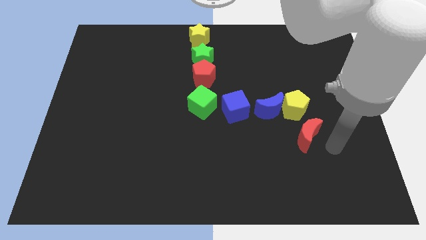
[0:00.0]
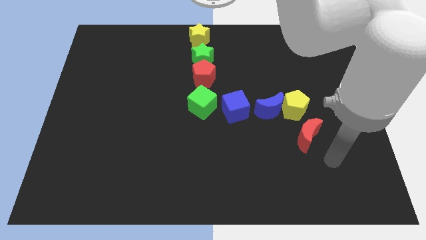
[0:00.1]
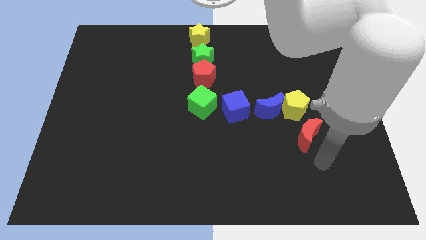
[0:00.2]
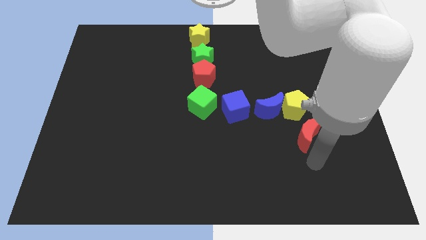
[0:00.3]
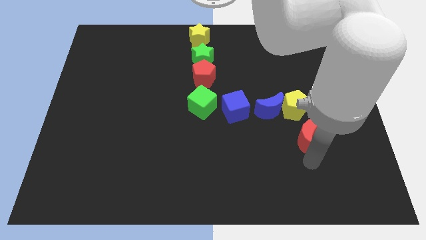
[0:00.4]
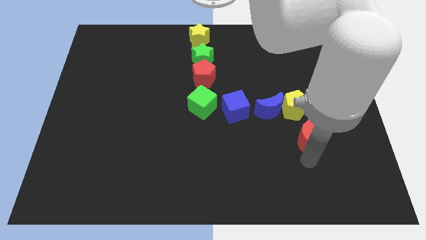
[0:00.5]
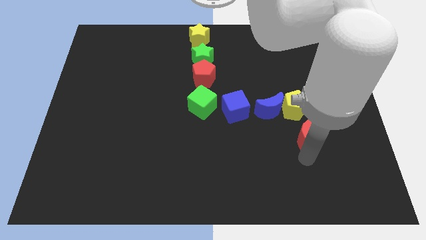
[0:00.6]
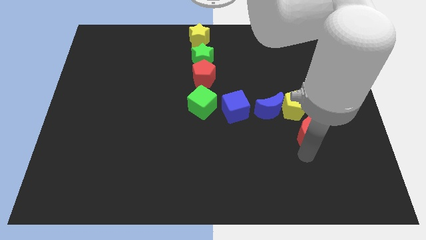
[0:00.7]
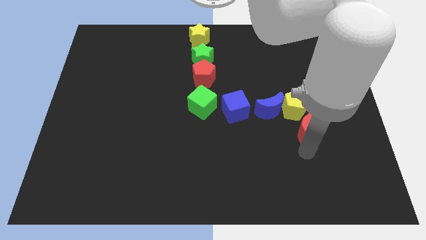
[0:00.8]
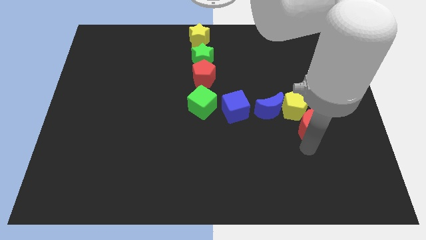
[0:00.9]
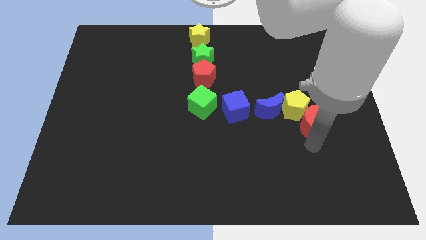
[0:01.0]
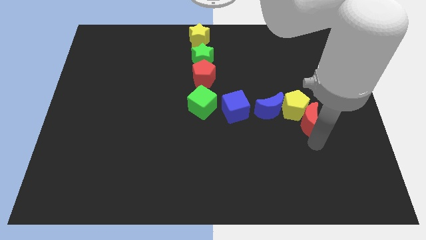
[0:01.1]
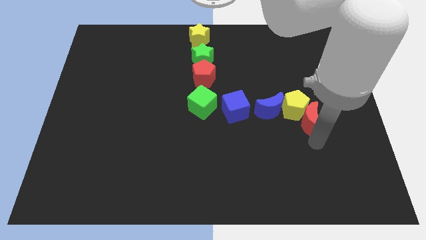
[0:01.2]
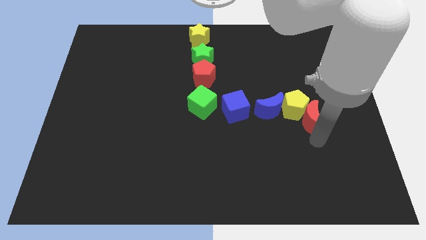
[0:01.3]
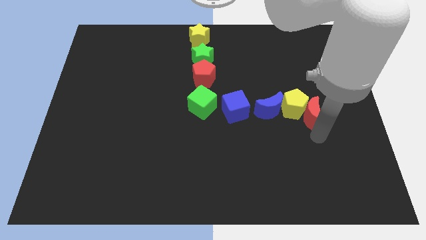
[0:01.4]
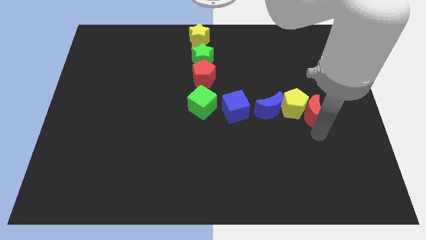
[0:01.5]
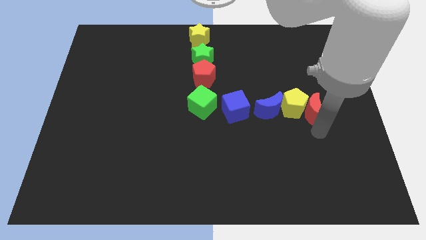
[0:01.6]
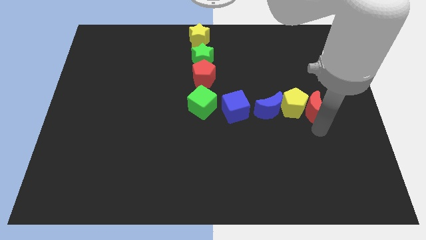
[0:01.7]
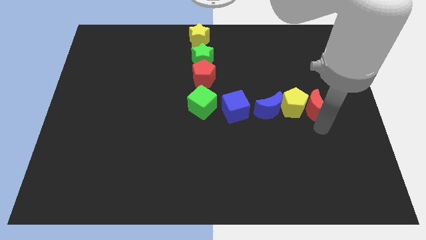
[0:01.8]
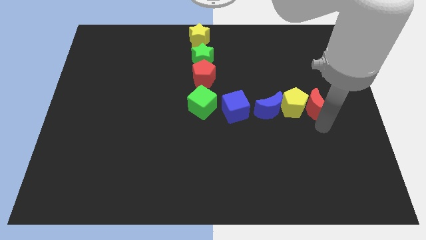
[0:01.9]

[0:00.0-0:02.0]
move the red crescent to the right side of yellow pentagon to form a line

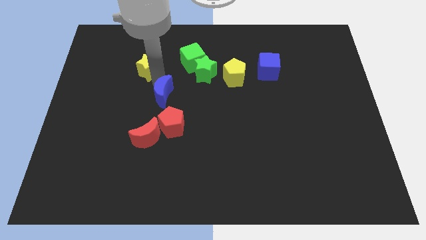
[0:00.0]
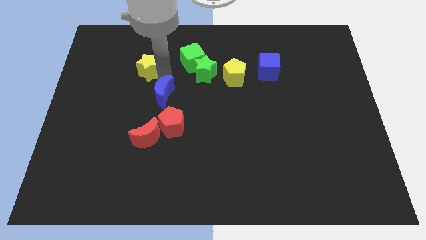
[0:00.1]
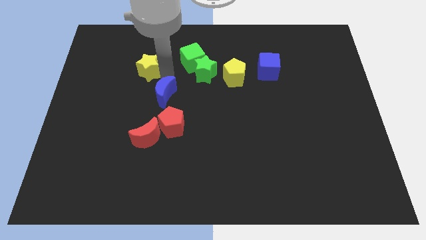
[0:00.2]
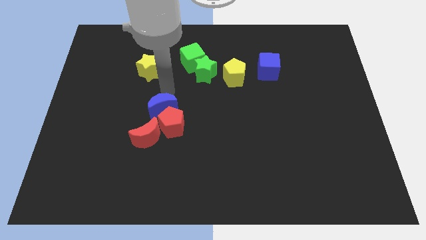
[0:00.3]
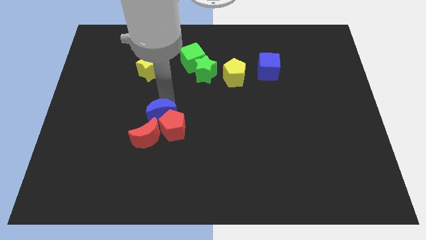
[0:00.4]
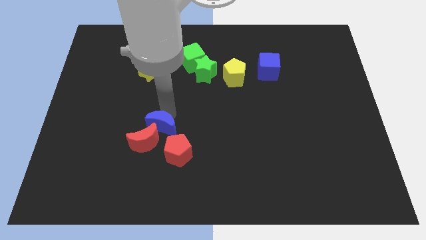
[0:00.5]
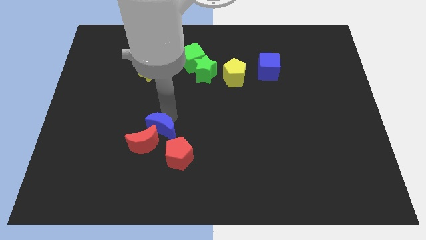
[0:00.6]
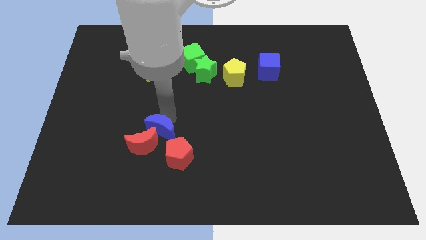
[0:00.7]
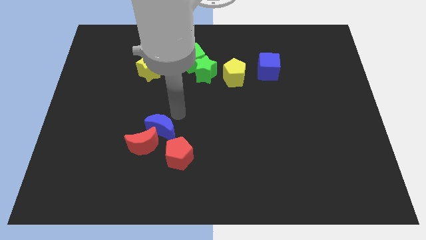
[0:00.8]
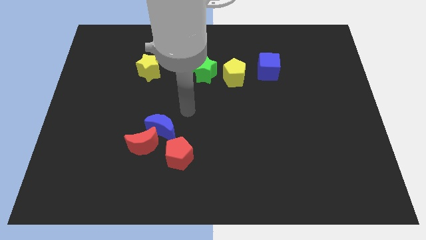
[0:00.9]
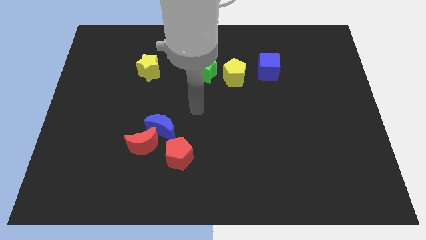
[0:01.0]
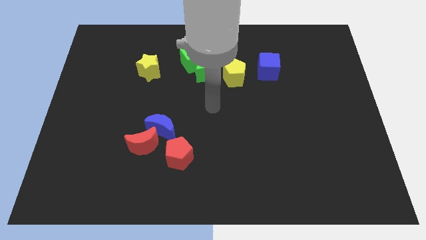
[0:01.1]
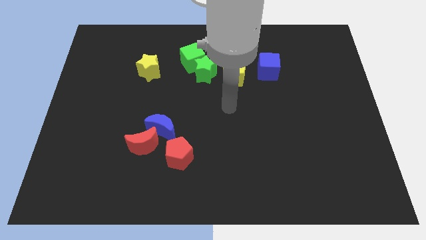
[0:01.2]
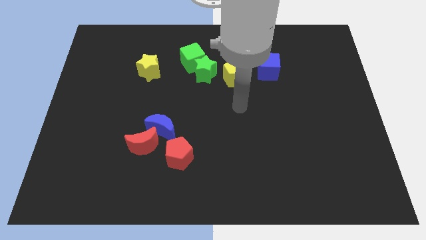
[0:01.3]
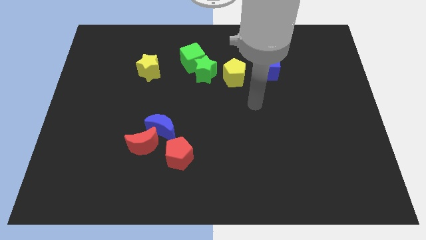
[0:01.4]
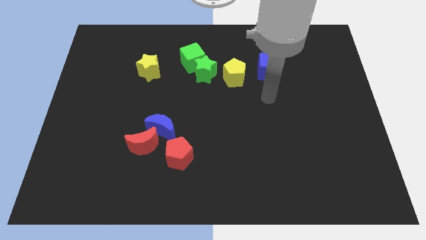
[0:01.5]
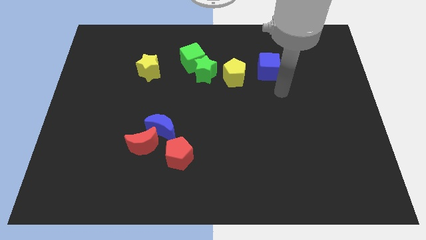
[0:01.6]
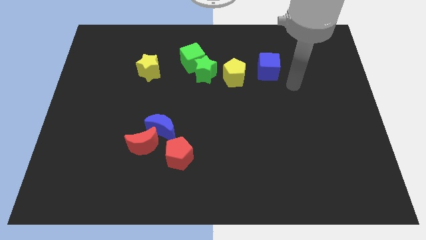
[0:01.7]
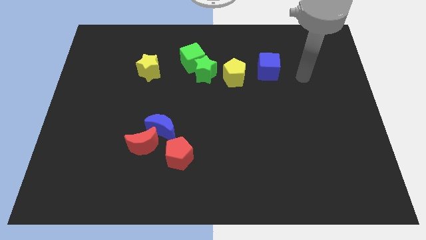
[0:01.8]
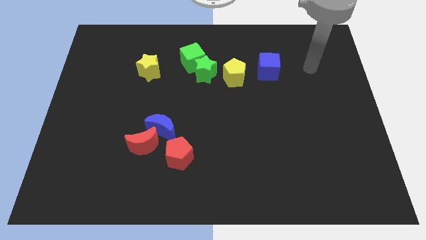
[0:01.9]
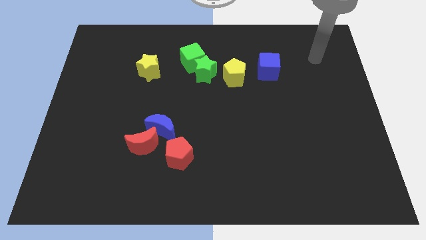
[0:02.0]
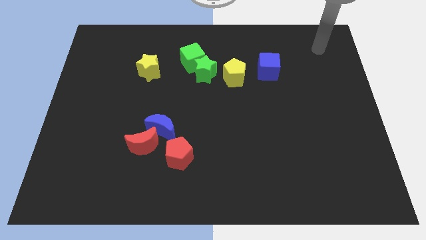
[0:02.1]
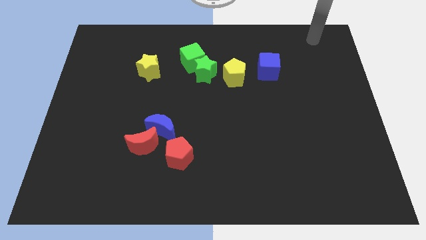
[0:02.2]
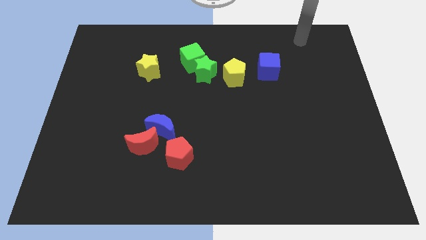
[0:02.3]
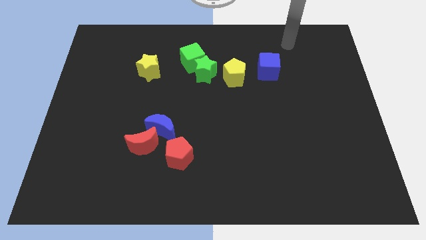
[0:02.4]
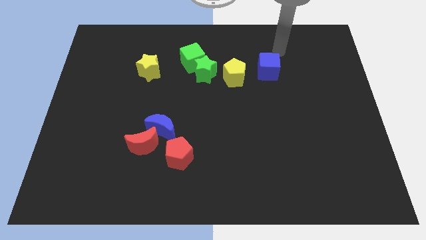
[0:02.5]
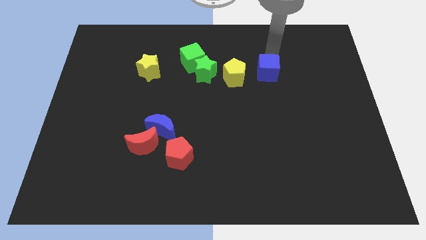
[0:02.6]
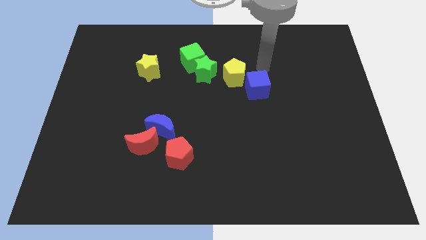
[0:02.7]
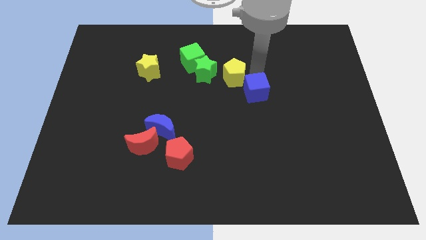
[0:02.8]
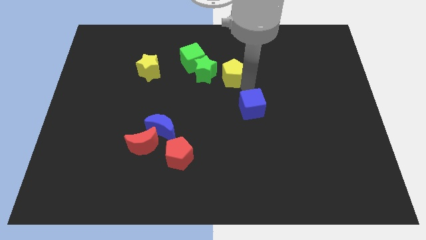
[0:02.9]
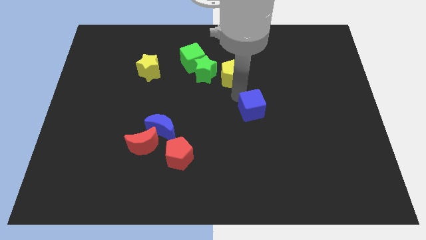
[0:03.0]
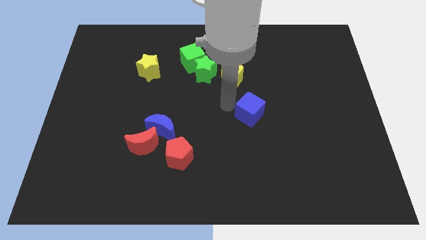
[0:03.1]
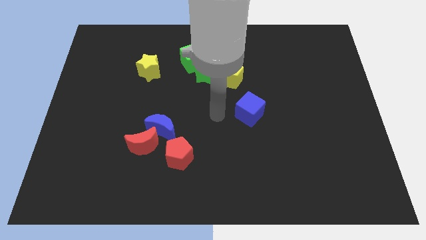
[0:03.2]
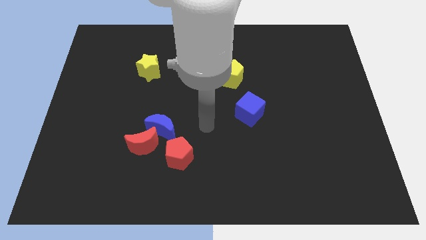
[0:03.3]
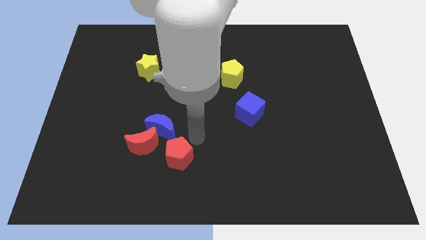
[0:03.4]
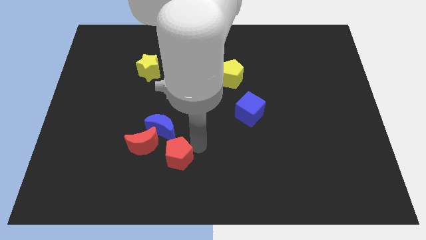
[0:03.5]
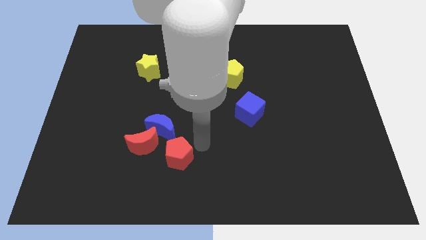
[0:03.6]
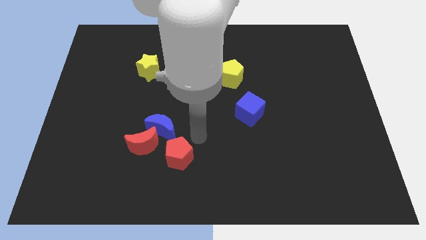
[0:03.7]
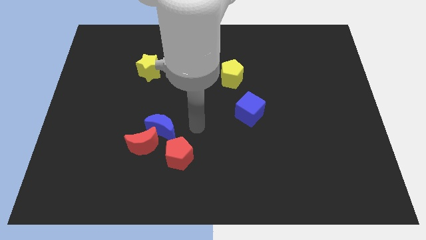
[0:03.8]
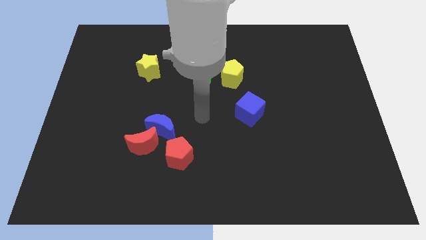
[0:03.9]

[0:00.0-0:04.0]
place the blue moon red crescentred pentagon and cube towards bottom

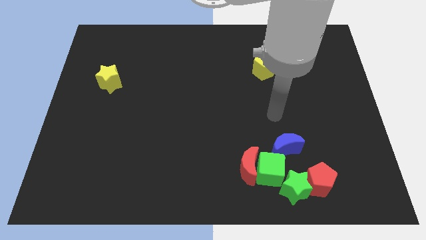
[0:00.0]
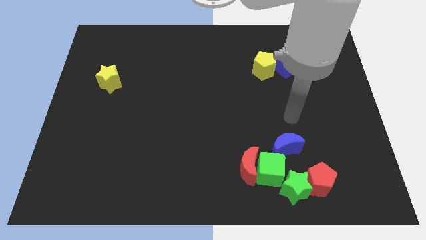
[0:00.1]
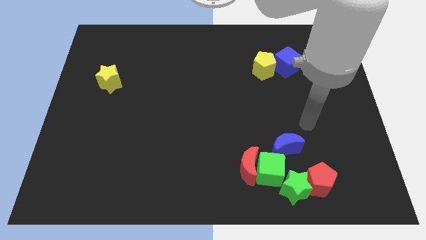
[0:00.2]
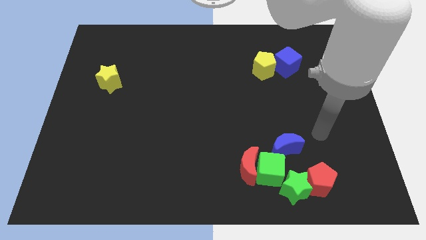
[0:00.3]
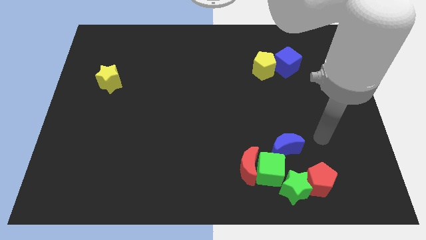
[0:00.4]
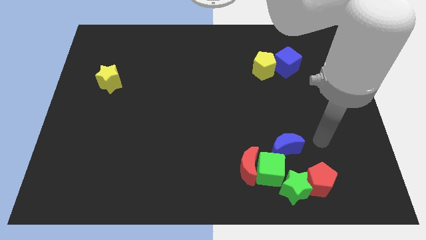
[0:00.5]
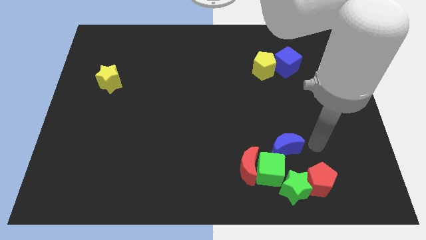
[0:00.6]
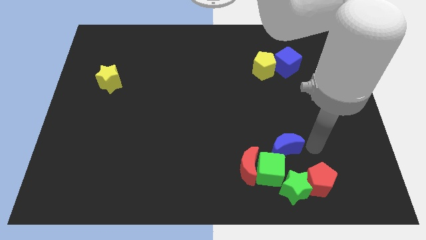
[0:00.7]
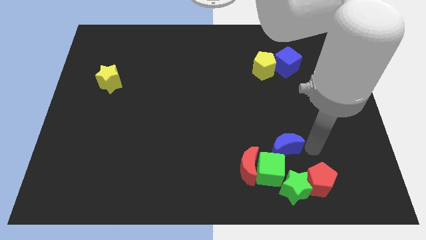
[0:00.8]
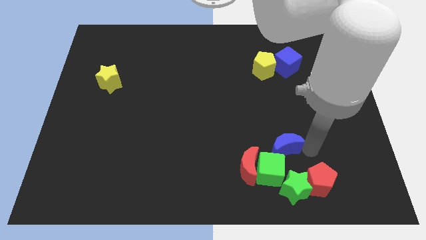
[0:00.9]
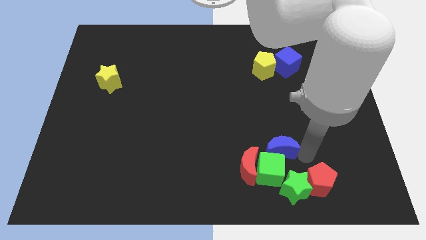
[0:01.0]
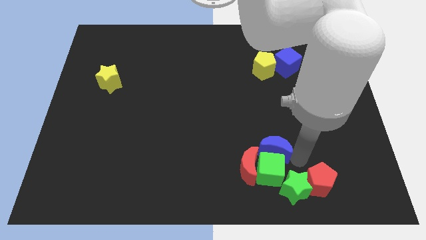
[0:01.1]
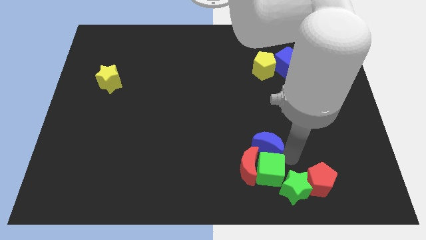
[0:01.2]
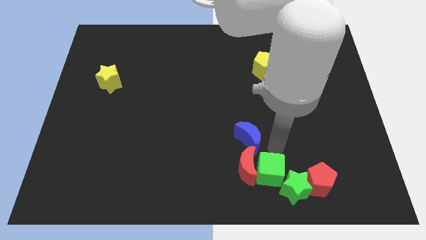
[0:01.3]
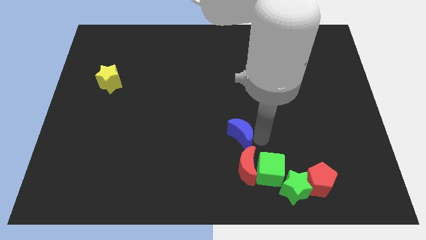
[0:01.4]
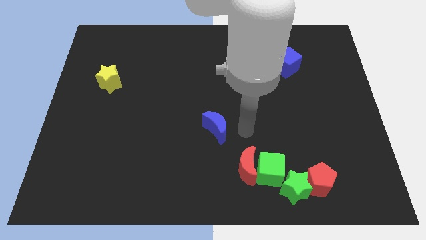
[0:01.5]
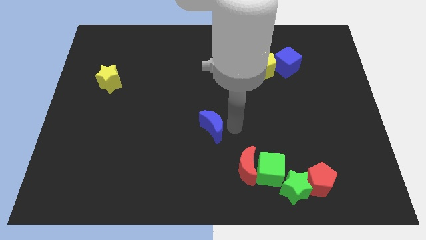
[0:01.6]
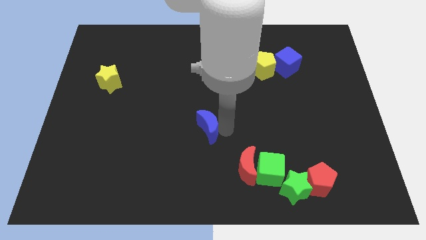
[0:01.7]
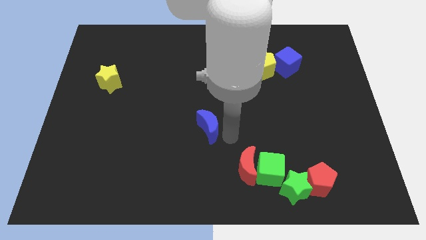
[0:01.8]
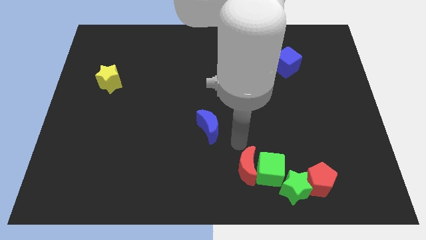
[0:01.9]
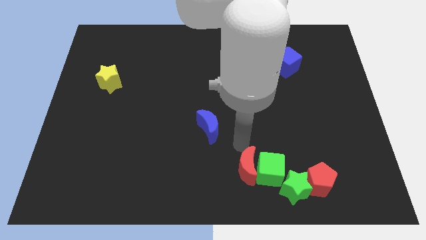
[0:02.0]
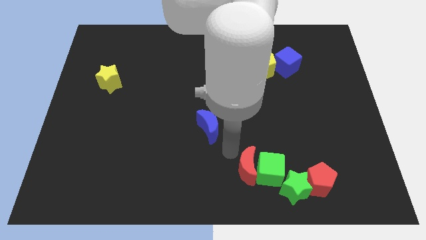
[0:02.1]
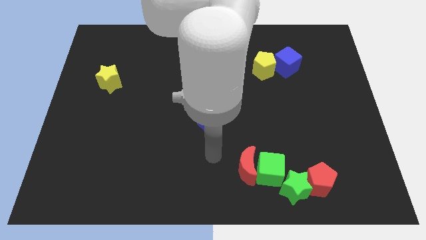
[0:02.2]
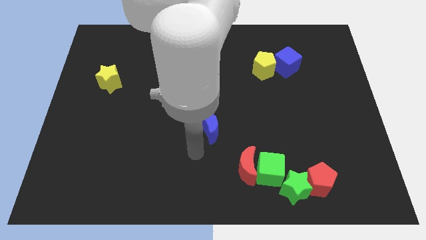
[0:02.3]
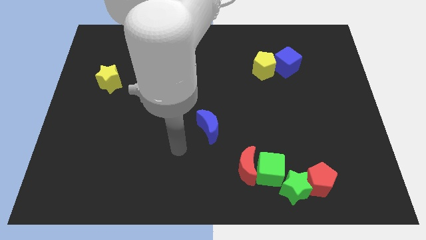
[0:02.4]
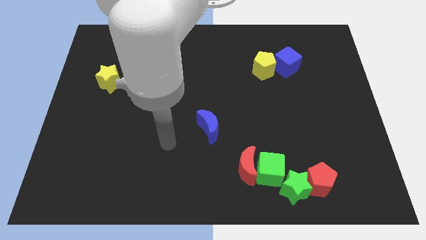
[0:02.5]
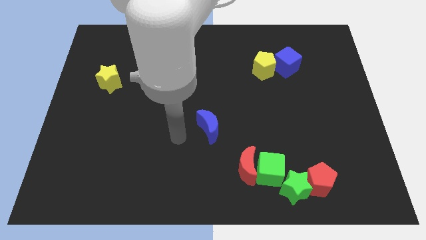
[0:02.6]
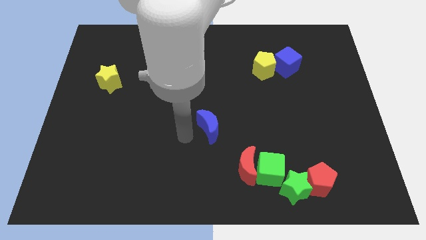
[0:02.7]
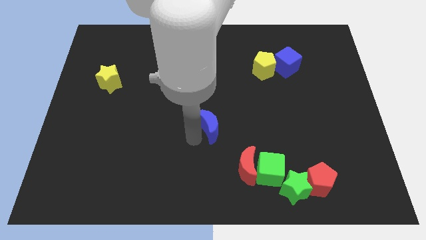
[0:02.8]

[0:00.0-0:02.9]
move the blue moon to the center of the board

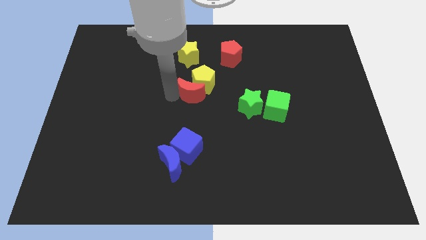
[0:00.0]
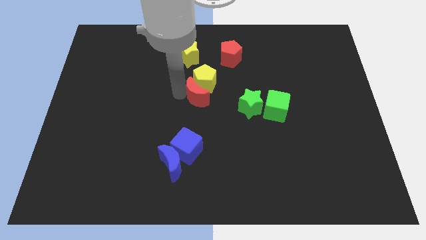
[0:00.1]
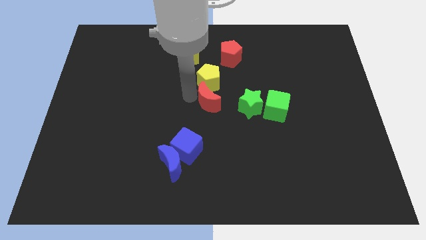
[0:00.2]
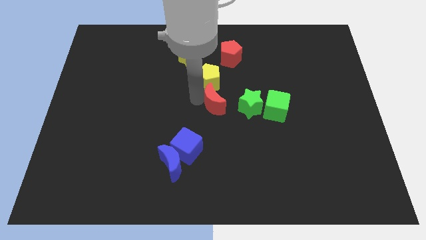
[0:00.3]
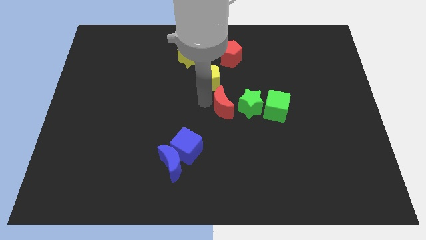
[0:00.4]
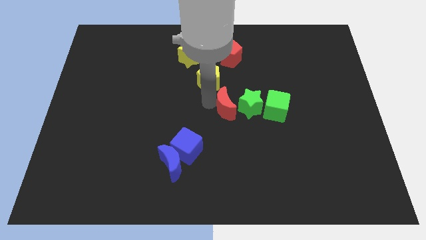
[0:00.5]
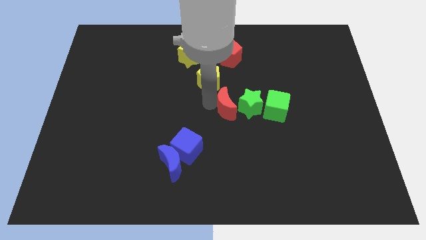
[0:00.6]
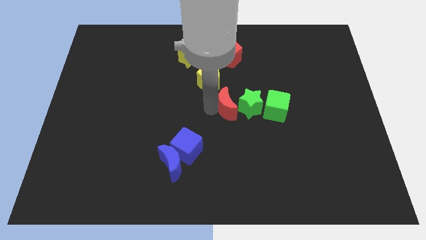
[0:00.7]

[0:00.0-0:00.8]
move the red moon towards the green star
